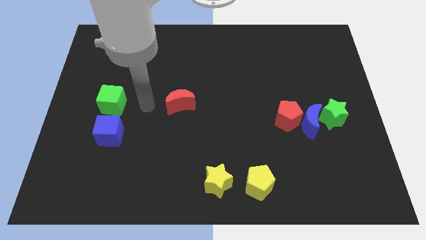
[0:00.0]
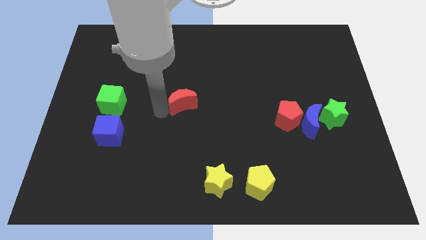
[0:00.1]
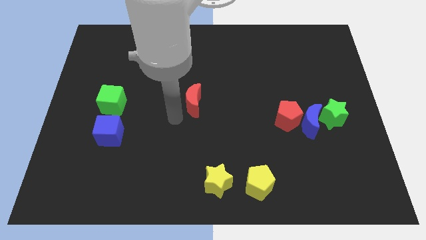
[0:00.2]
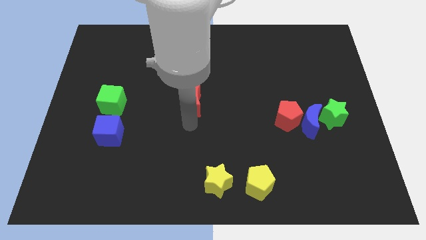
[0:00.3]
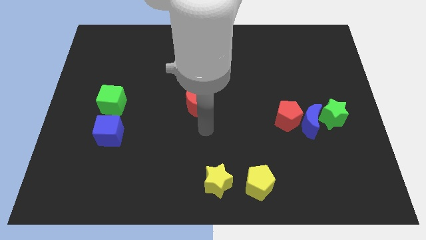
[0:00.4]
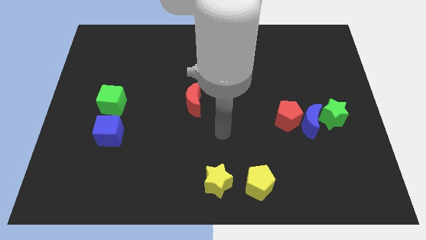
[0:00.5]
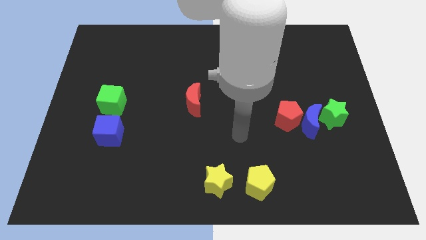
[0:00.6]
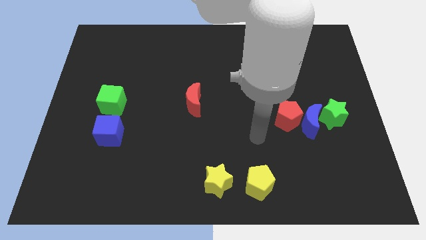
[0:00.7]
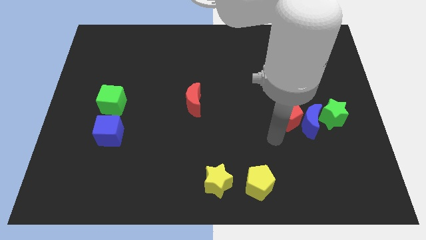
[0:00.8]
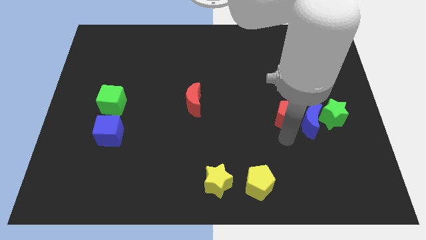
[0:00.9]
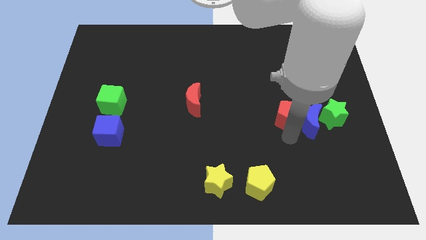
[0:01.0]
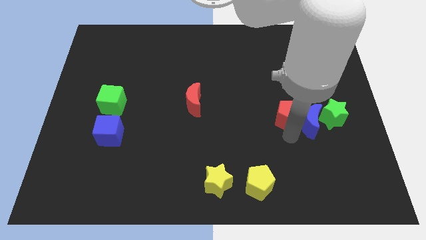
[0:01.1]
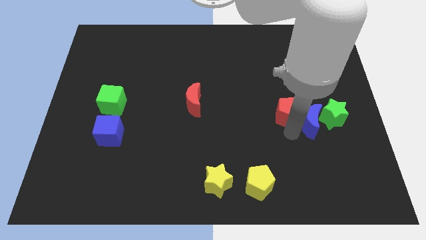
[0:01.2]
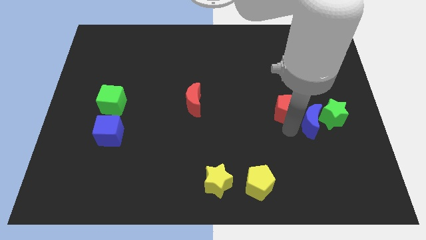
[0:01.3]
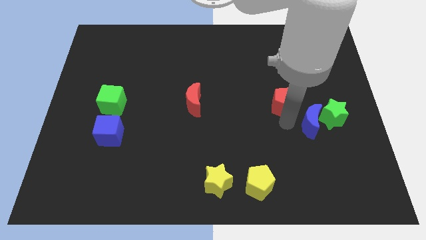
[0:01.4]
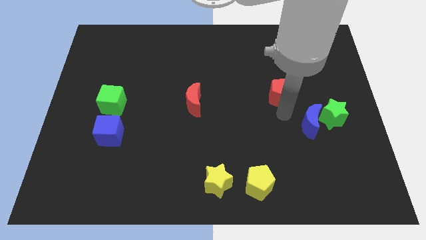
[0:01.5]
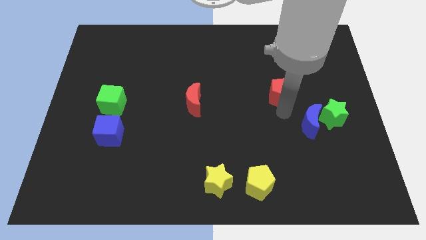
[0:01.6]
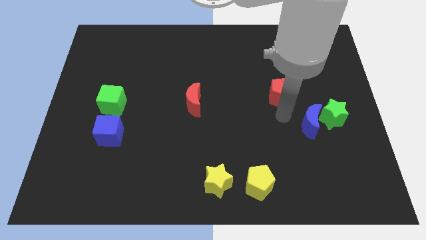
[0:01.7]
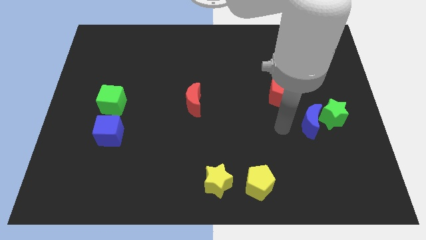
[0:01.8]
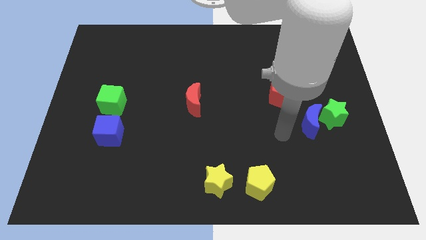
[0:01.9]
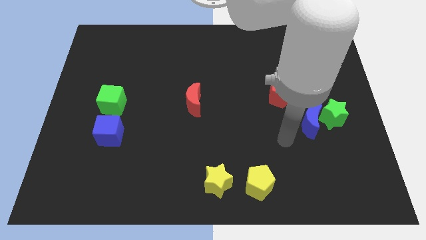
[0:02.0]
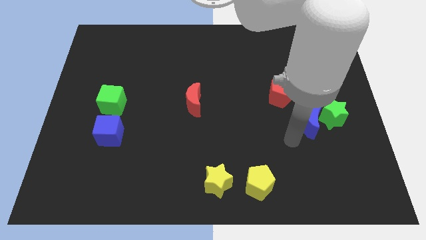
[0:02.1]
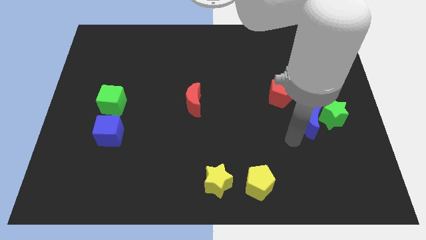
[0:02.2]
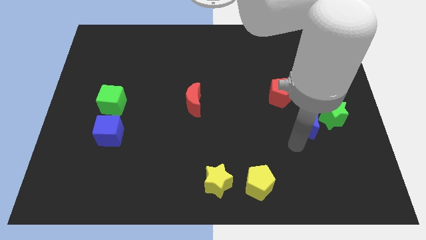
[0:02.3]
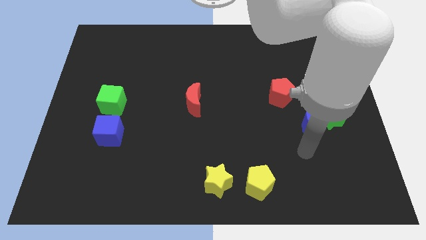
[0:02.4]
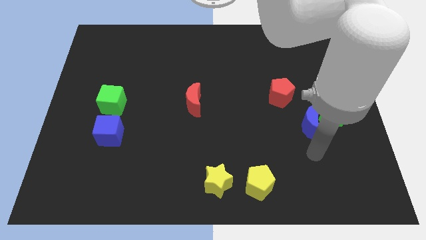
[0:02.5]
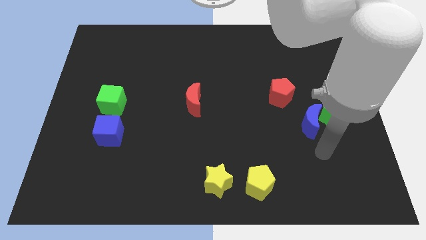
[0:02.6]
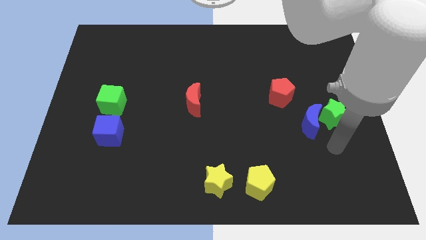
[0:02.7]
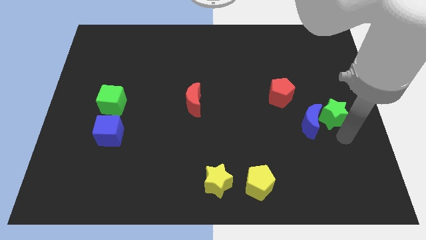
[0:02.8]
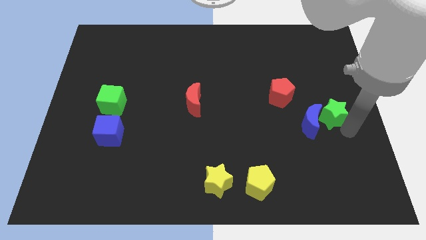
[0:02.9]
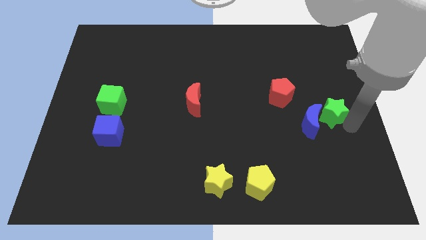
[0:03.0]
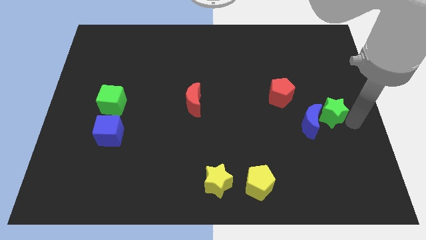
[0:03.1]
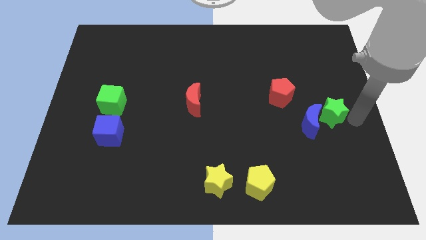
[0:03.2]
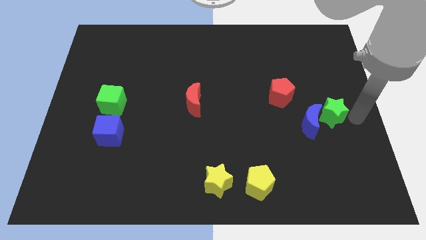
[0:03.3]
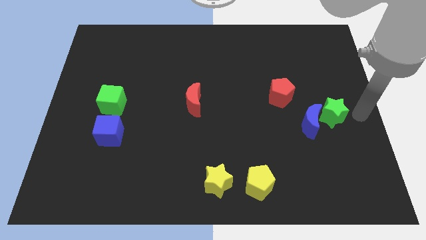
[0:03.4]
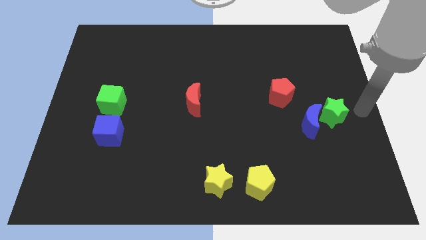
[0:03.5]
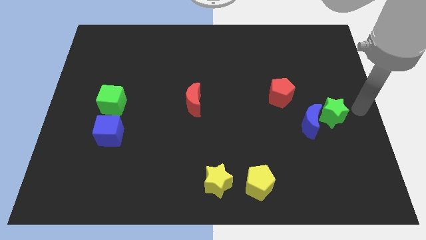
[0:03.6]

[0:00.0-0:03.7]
move the red pentagon and the red moon slightly up

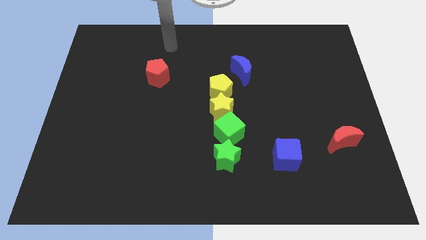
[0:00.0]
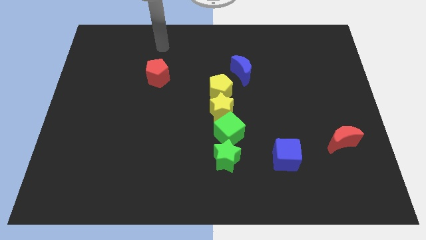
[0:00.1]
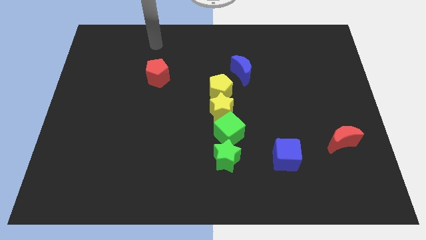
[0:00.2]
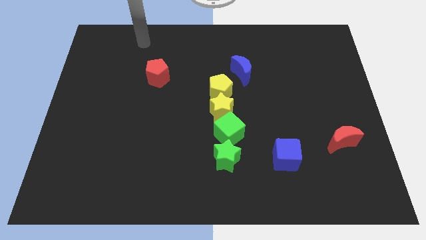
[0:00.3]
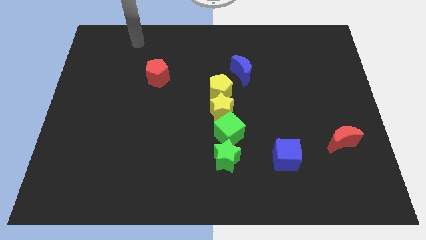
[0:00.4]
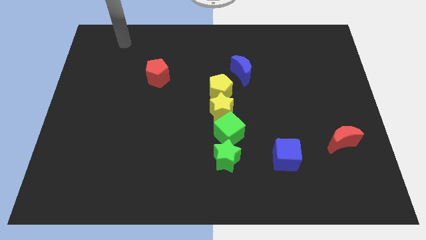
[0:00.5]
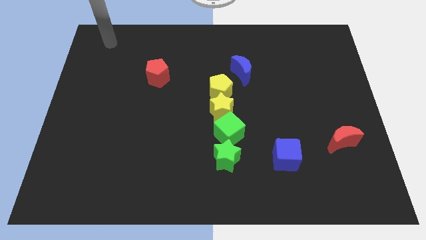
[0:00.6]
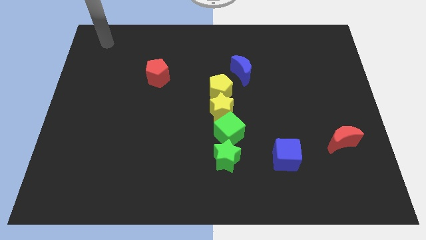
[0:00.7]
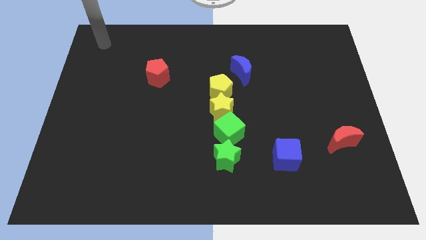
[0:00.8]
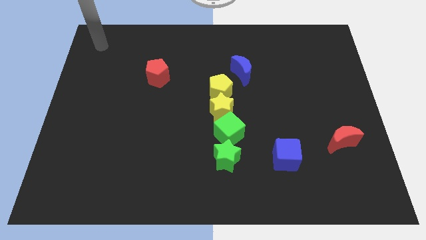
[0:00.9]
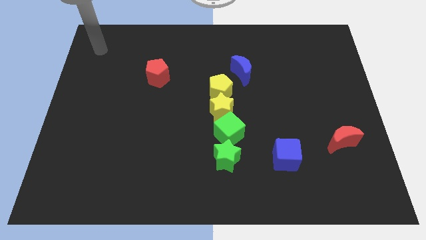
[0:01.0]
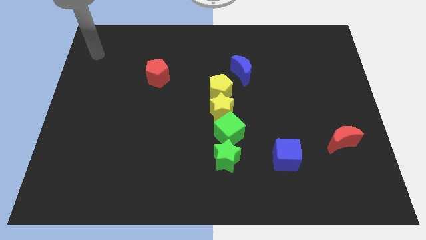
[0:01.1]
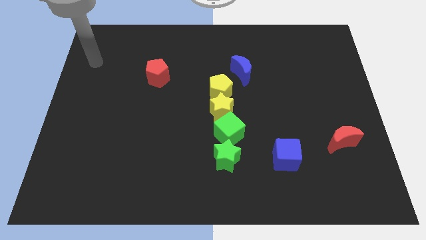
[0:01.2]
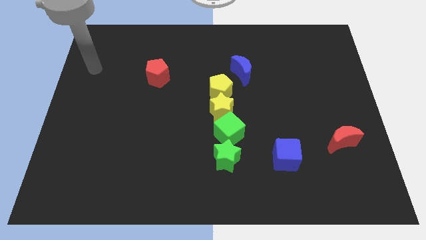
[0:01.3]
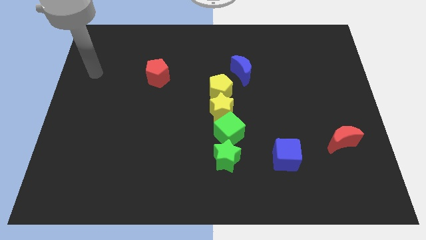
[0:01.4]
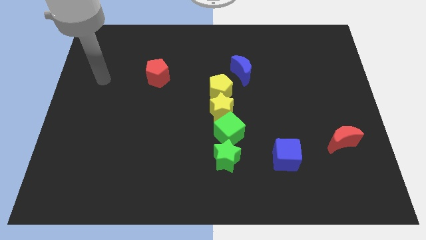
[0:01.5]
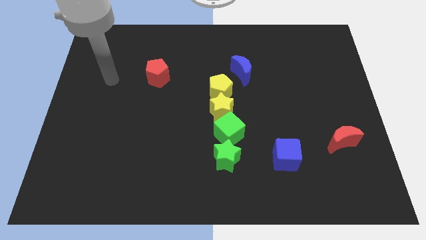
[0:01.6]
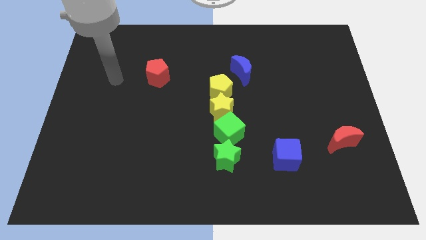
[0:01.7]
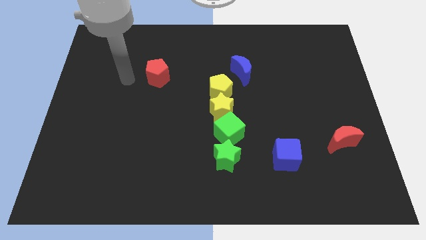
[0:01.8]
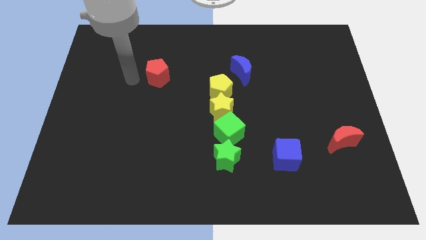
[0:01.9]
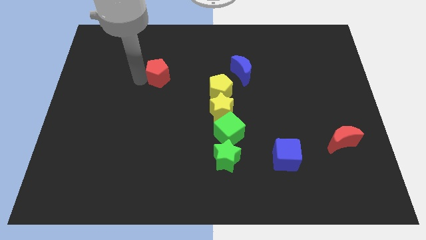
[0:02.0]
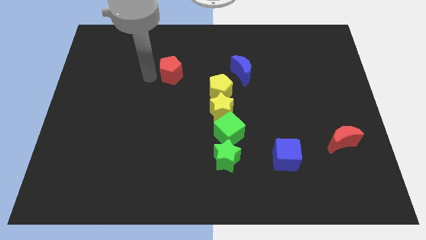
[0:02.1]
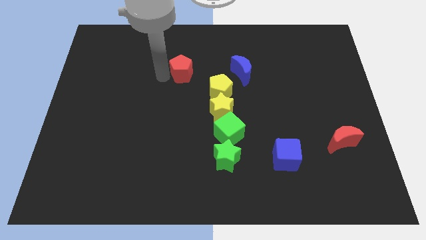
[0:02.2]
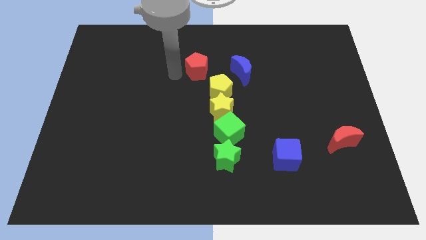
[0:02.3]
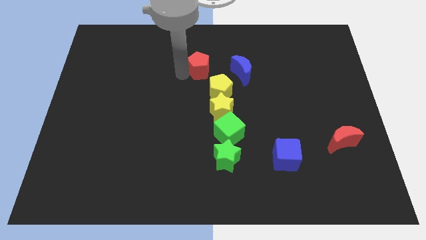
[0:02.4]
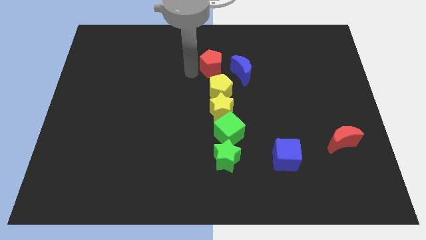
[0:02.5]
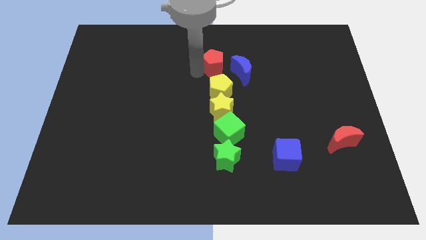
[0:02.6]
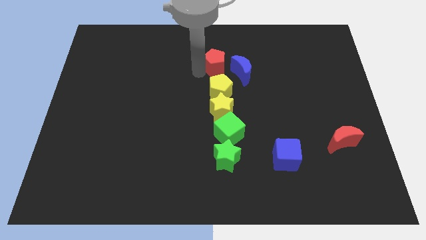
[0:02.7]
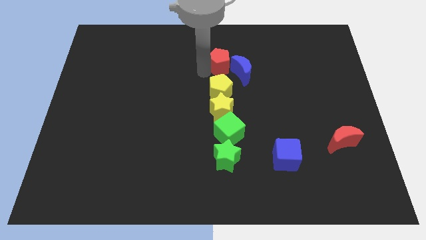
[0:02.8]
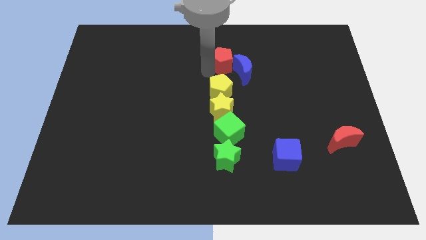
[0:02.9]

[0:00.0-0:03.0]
push the red pentagon towards the blue crescent

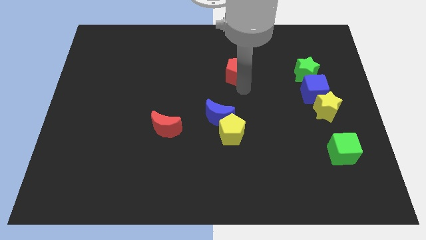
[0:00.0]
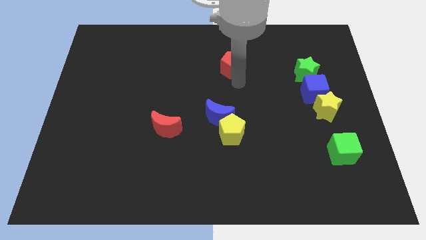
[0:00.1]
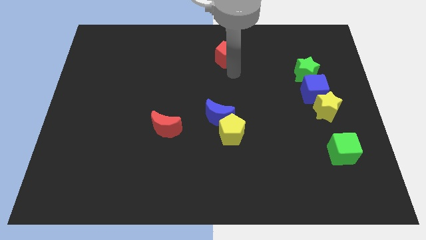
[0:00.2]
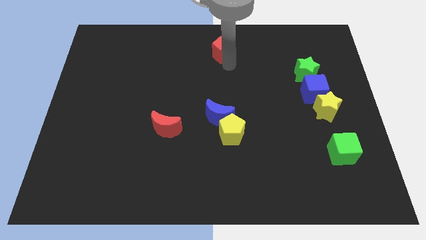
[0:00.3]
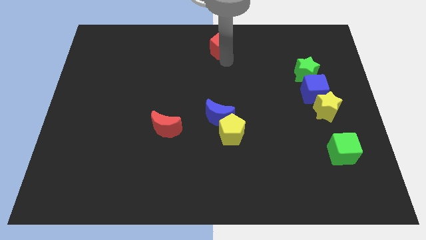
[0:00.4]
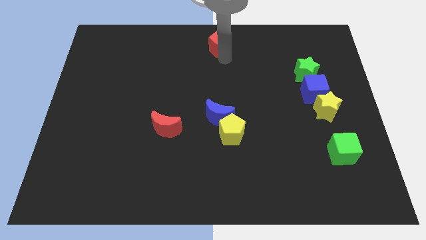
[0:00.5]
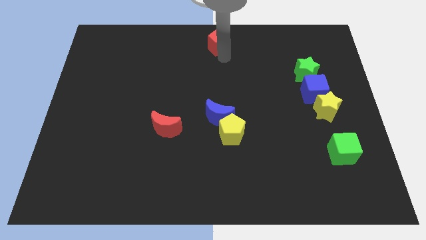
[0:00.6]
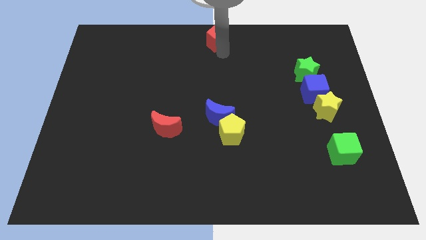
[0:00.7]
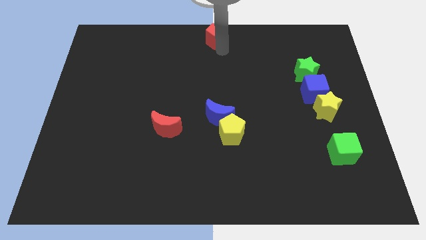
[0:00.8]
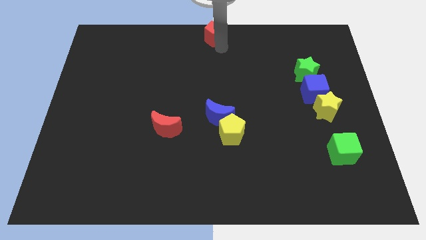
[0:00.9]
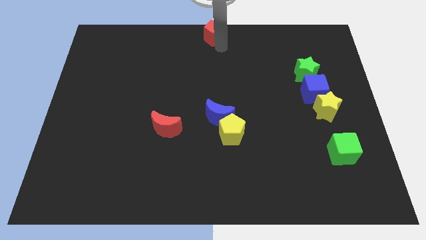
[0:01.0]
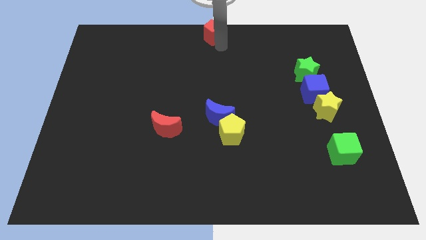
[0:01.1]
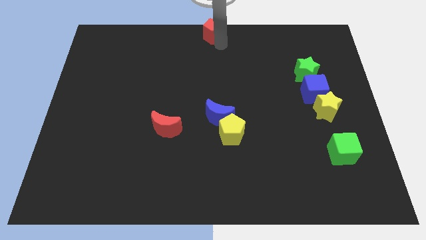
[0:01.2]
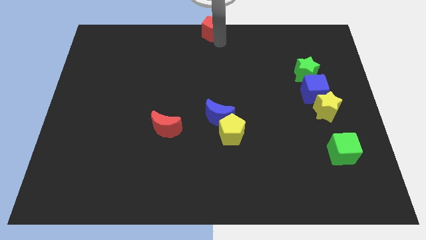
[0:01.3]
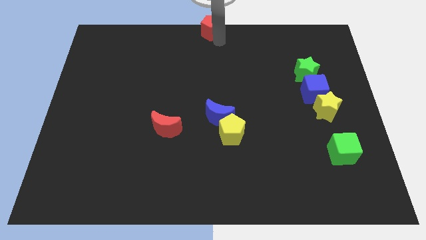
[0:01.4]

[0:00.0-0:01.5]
move the red pentagon to the top center of the board

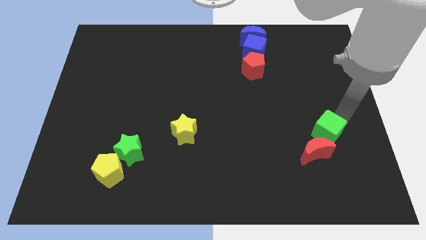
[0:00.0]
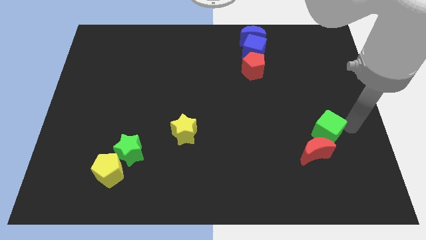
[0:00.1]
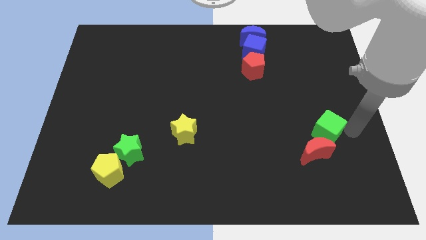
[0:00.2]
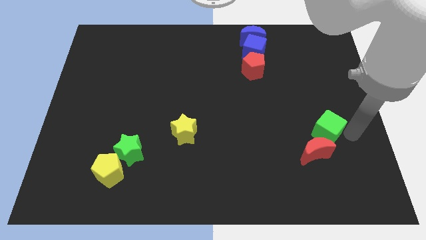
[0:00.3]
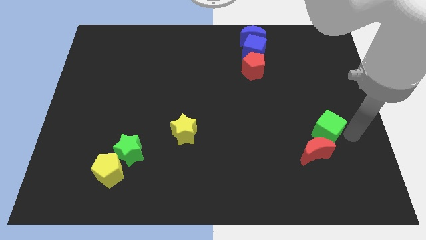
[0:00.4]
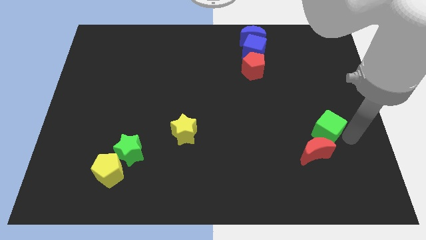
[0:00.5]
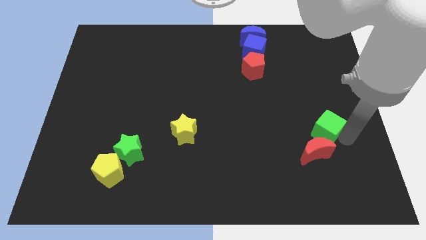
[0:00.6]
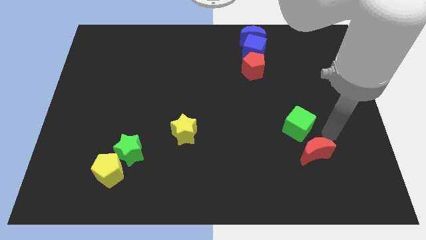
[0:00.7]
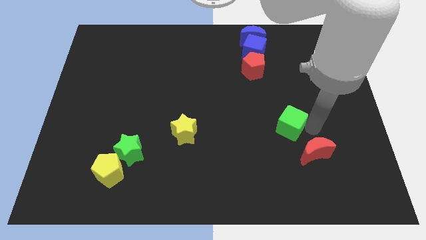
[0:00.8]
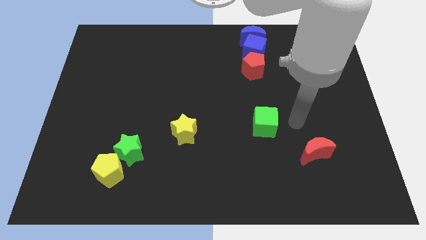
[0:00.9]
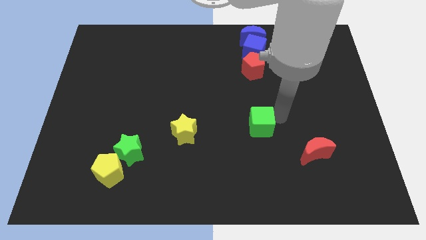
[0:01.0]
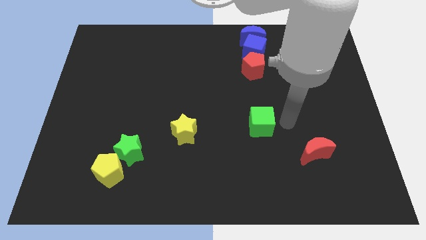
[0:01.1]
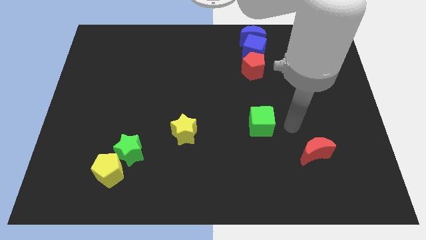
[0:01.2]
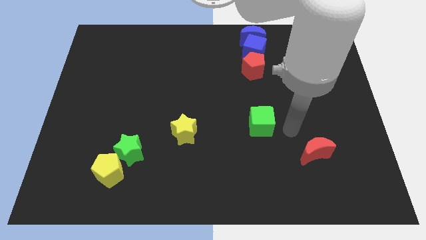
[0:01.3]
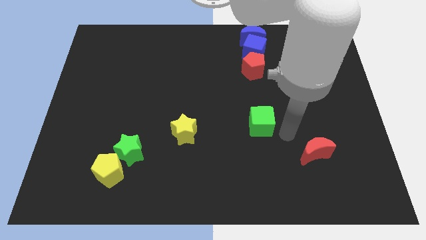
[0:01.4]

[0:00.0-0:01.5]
move the green cube slightly left to the yellow star
